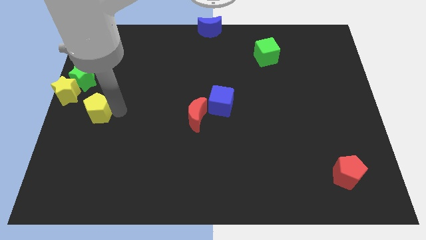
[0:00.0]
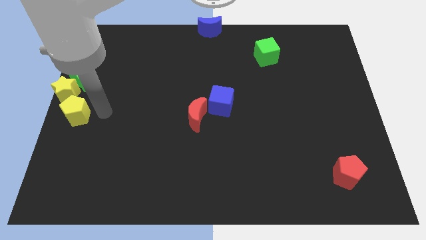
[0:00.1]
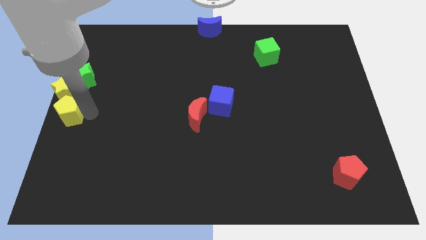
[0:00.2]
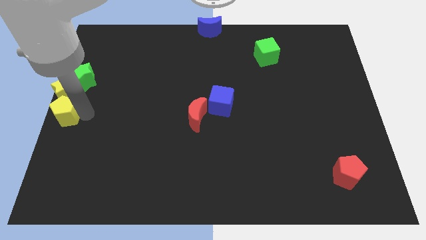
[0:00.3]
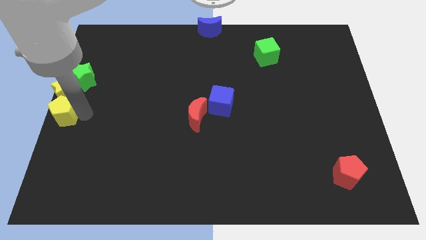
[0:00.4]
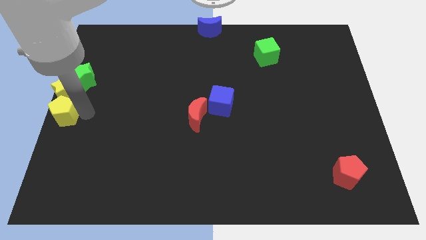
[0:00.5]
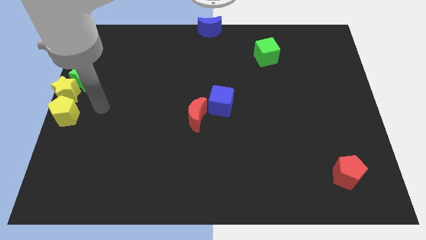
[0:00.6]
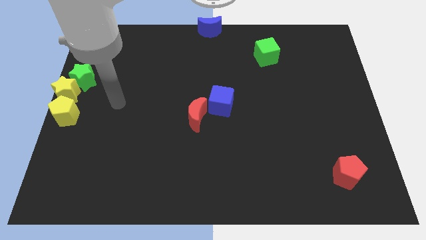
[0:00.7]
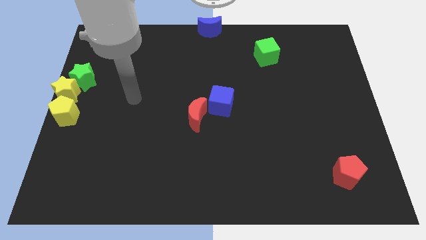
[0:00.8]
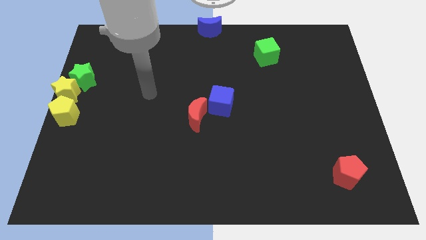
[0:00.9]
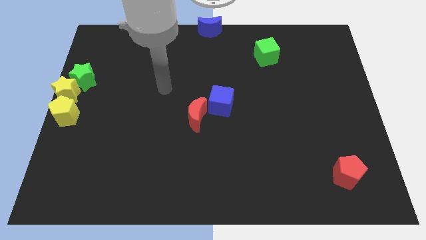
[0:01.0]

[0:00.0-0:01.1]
place the yellow pentagon to the bottom of the yellow star

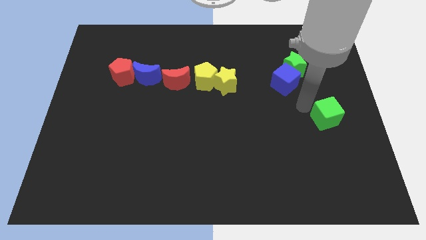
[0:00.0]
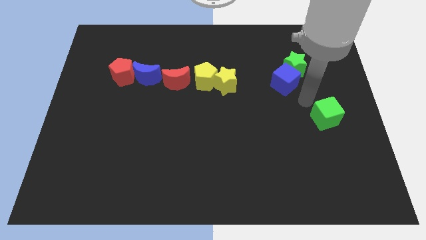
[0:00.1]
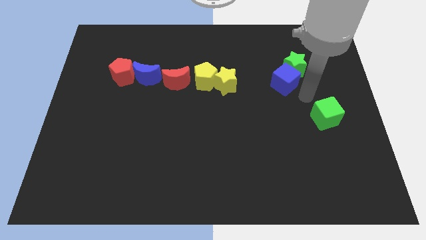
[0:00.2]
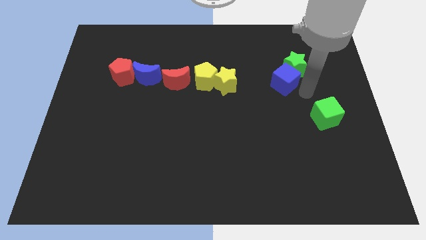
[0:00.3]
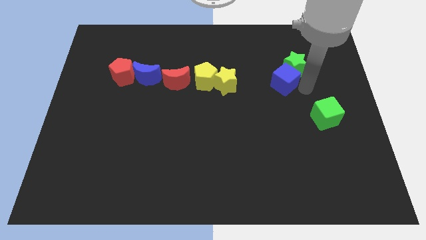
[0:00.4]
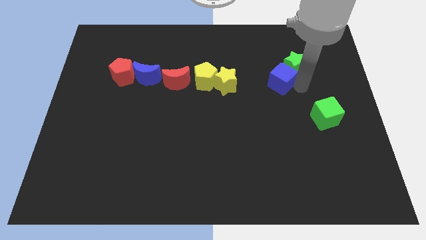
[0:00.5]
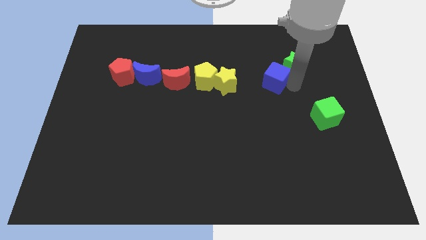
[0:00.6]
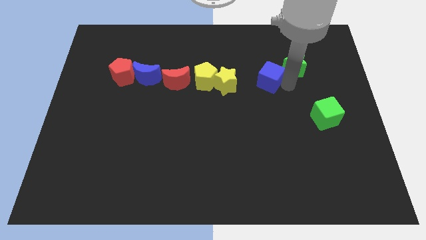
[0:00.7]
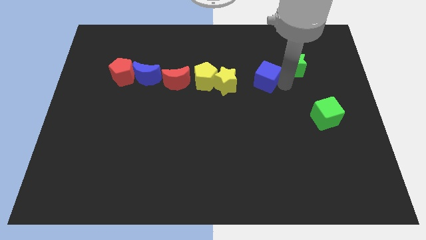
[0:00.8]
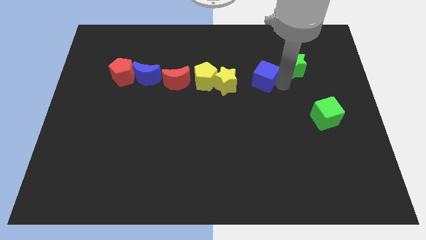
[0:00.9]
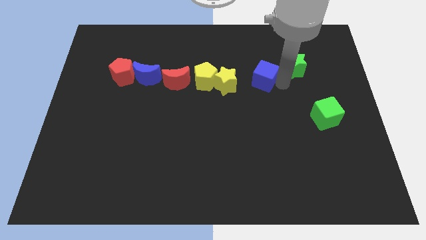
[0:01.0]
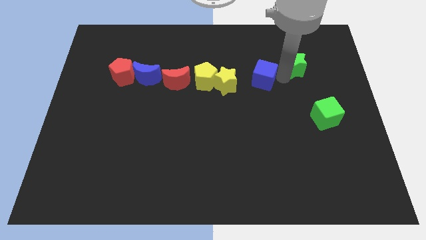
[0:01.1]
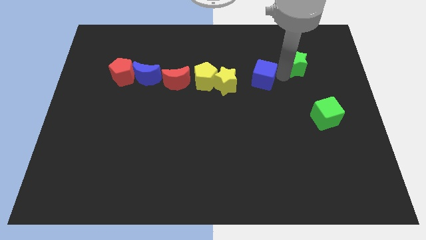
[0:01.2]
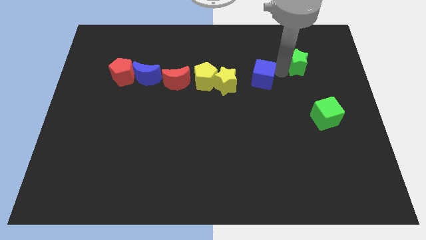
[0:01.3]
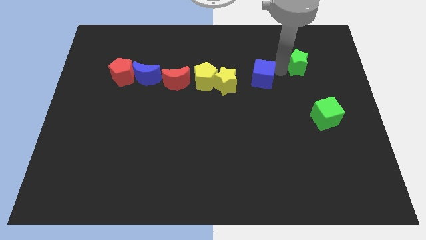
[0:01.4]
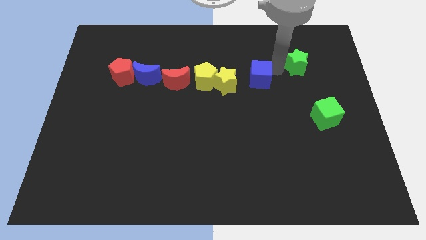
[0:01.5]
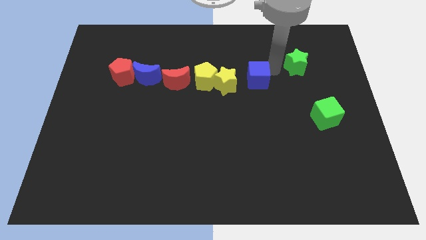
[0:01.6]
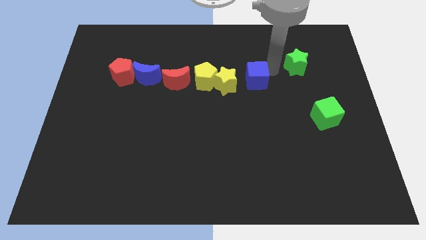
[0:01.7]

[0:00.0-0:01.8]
place the blue cube to the right of the yellow star

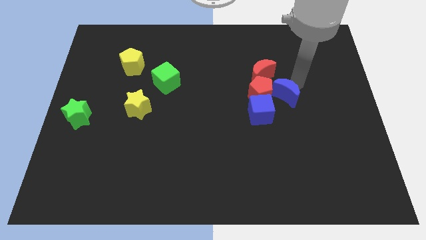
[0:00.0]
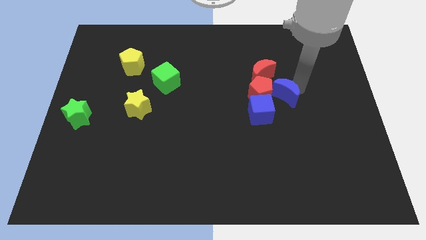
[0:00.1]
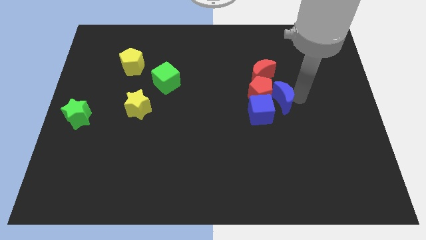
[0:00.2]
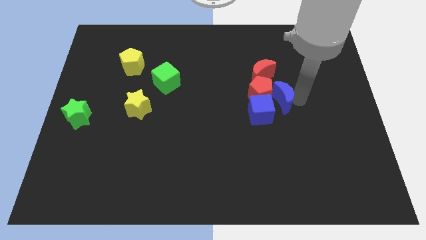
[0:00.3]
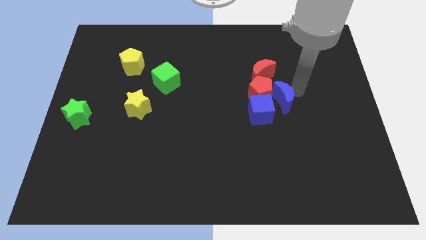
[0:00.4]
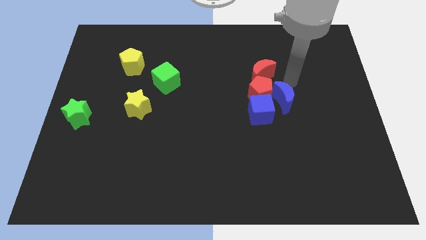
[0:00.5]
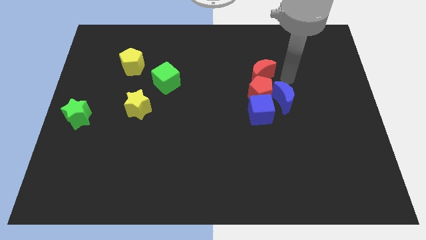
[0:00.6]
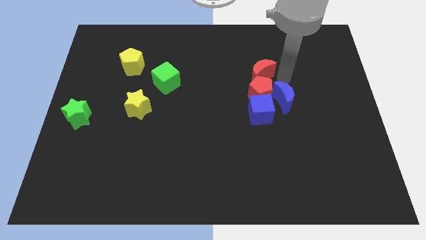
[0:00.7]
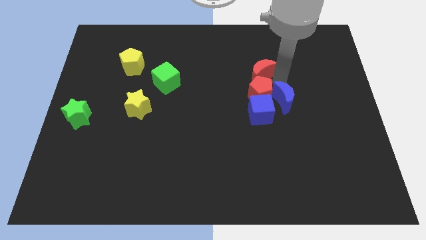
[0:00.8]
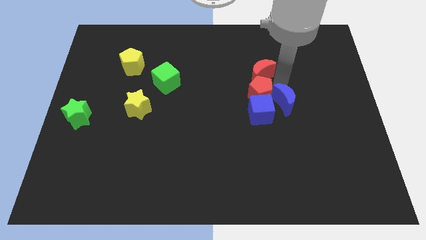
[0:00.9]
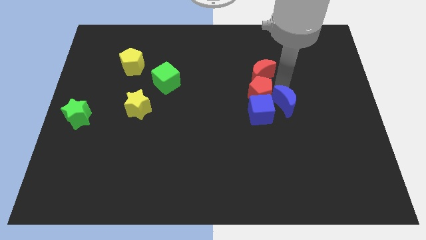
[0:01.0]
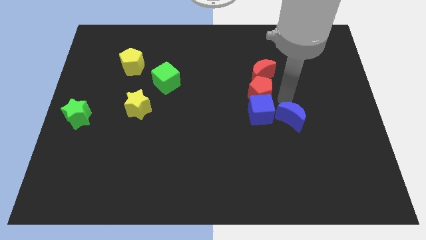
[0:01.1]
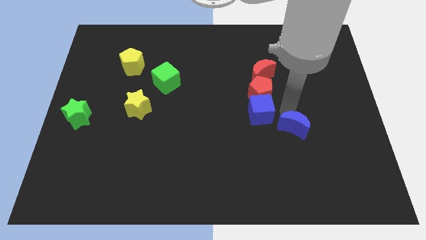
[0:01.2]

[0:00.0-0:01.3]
move the blue crescent away from the right side of the red pentagon

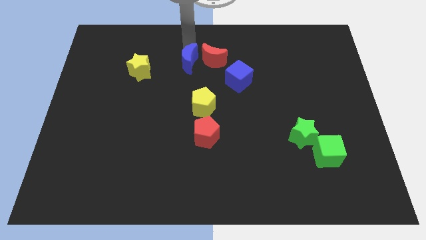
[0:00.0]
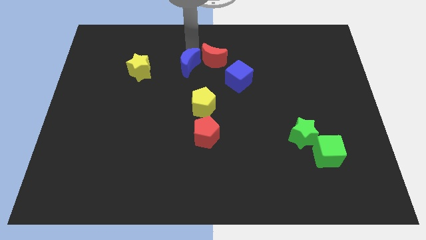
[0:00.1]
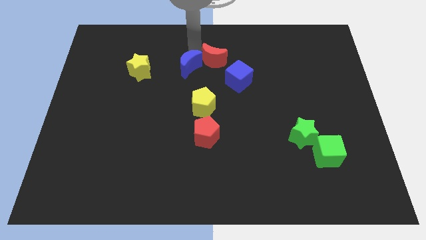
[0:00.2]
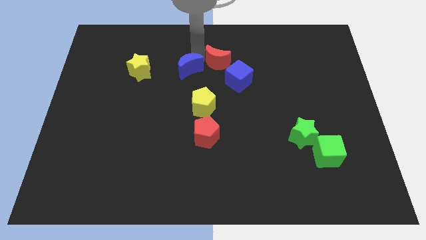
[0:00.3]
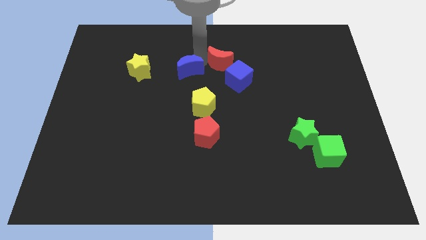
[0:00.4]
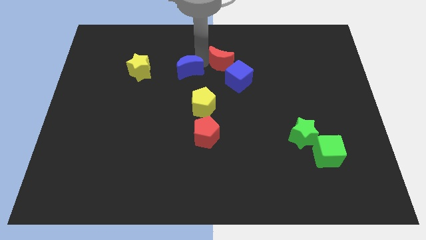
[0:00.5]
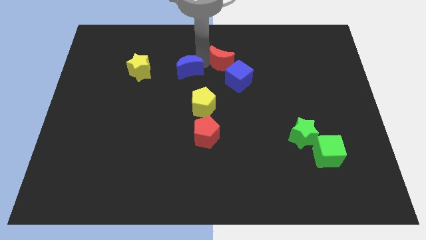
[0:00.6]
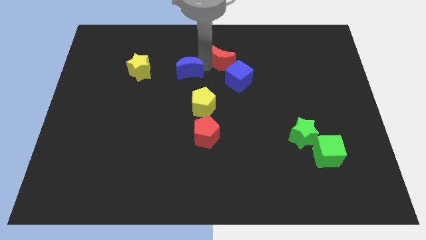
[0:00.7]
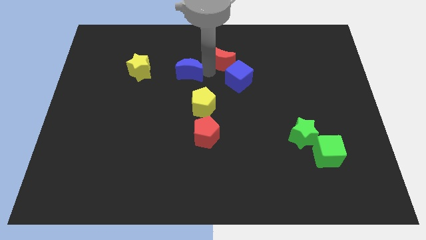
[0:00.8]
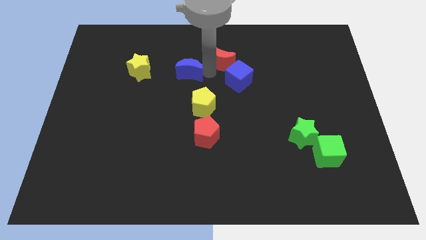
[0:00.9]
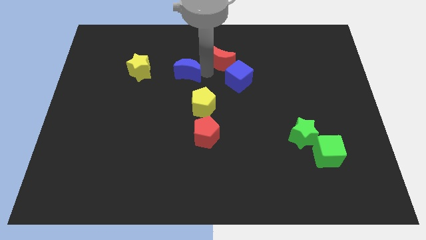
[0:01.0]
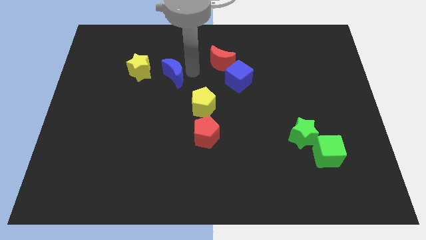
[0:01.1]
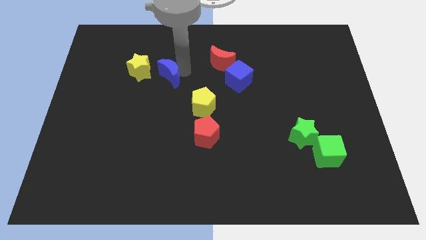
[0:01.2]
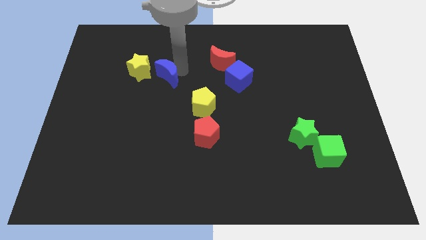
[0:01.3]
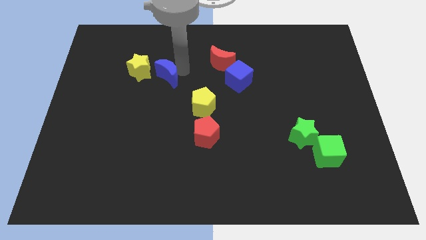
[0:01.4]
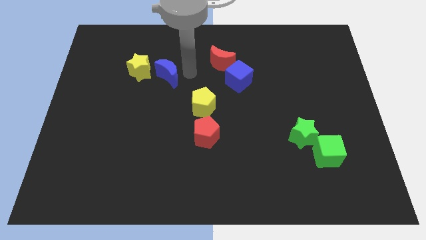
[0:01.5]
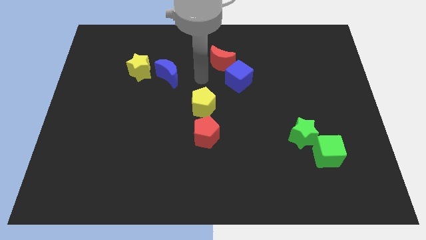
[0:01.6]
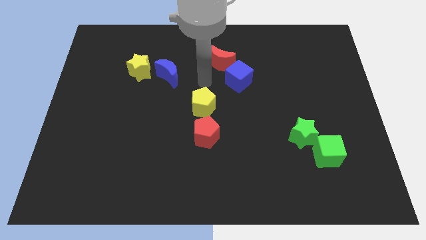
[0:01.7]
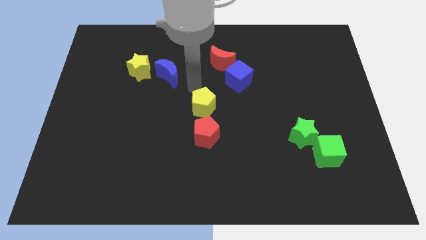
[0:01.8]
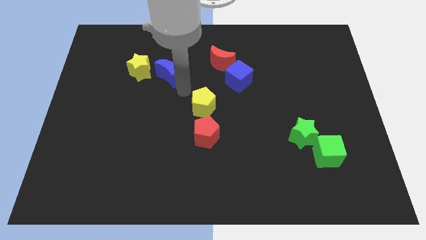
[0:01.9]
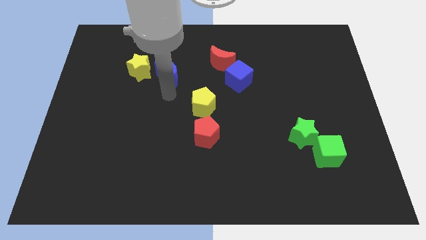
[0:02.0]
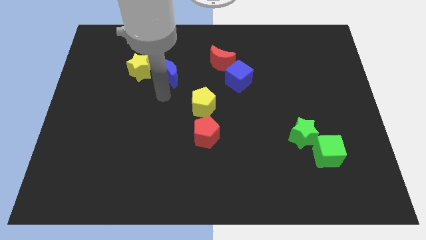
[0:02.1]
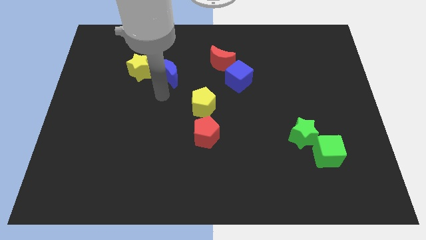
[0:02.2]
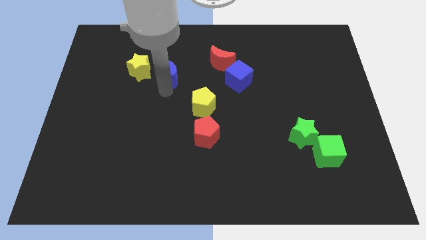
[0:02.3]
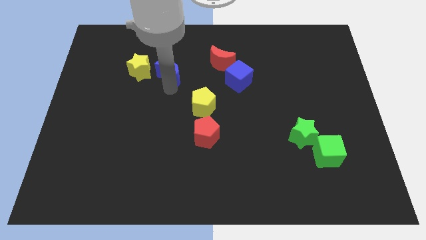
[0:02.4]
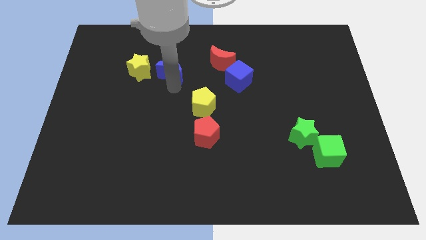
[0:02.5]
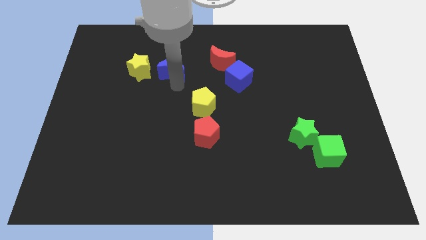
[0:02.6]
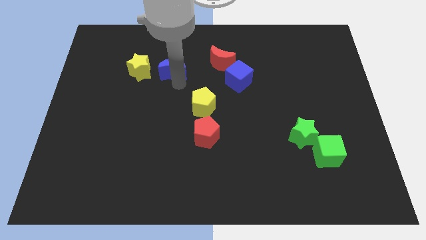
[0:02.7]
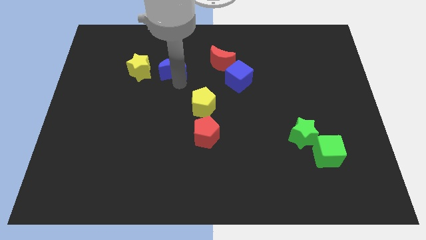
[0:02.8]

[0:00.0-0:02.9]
move blue moon towards yellow star

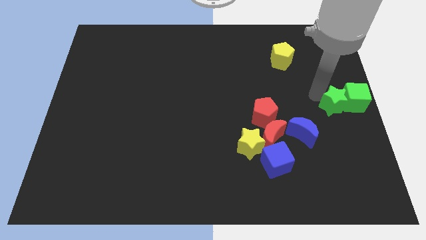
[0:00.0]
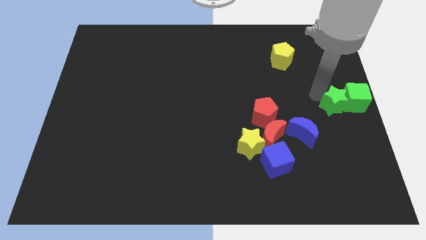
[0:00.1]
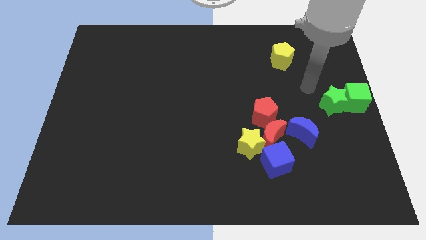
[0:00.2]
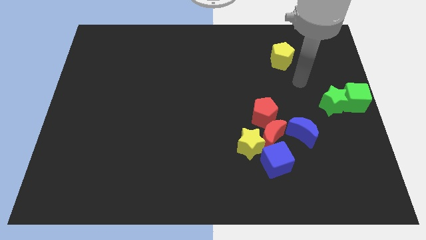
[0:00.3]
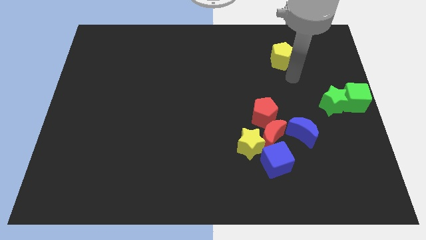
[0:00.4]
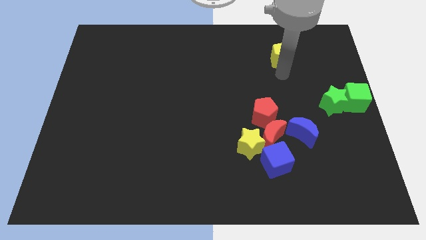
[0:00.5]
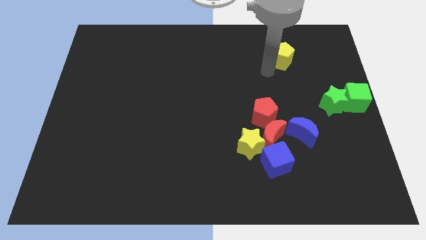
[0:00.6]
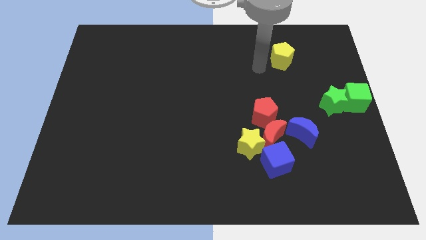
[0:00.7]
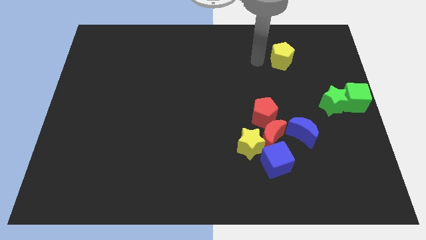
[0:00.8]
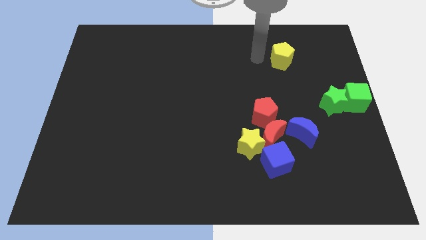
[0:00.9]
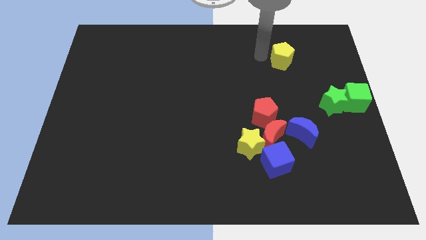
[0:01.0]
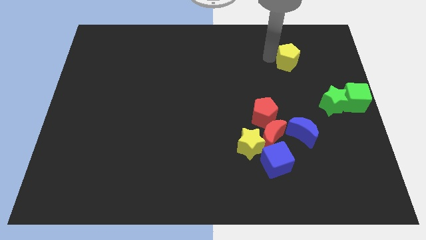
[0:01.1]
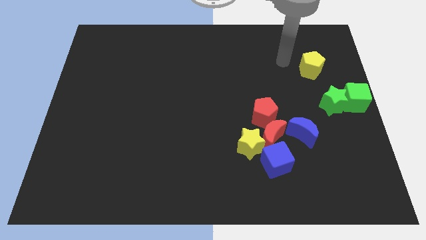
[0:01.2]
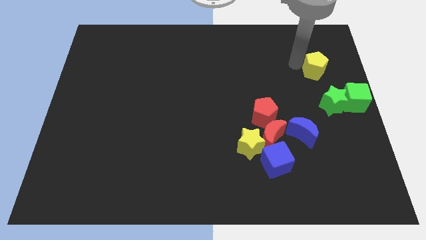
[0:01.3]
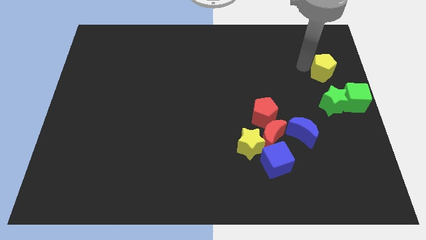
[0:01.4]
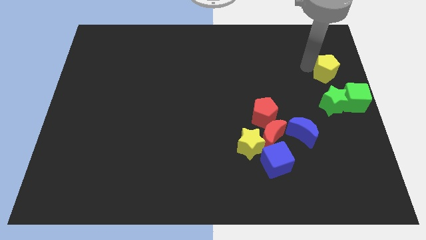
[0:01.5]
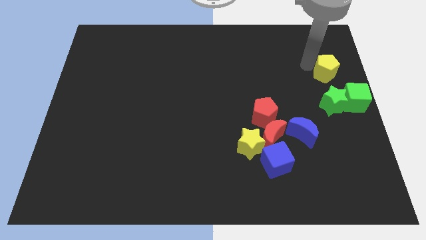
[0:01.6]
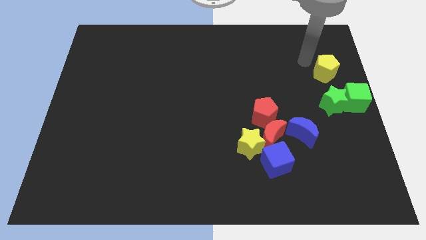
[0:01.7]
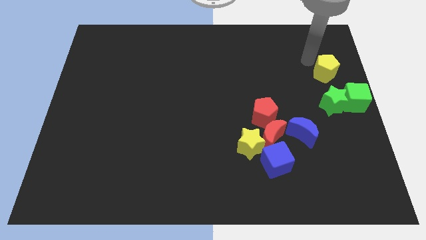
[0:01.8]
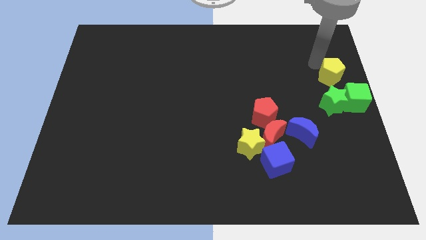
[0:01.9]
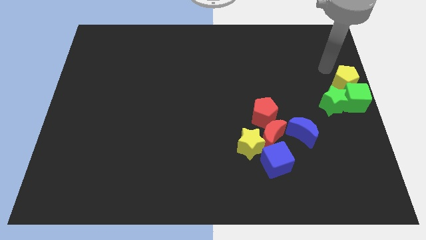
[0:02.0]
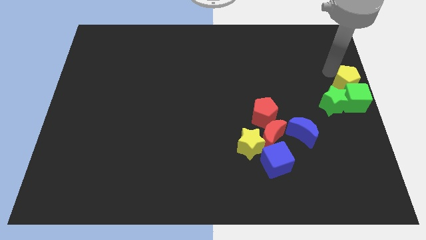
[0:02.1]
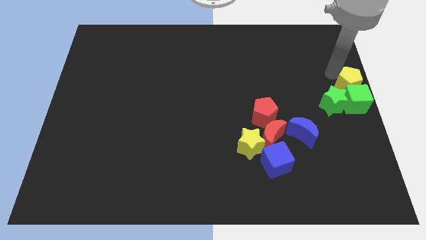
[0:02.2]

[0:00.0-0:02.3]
place the yellow pentagon at the top of green cube
